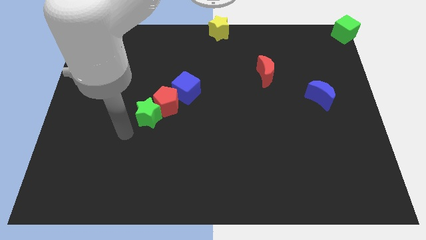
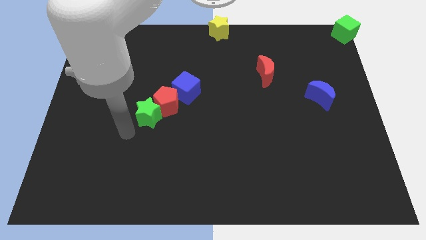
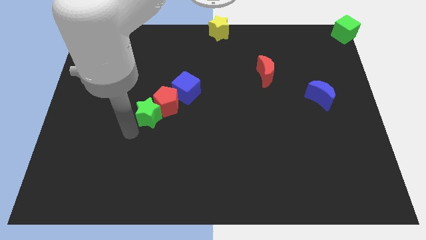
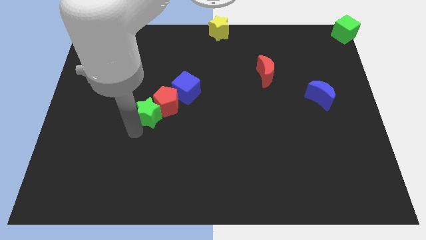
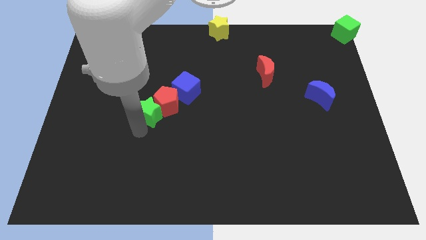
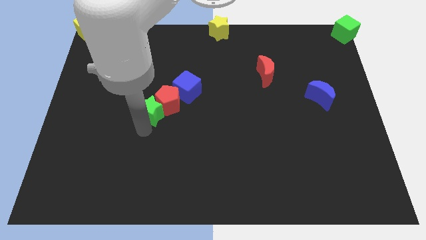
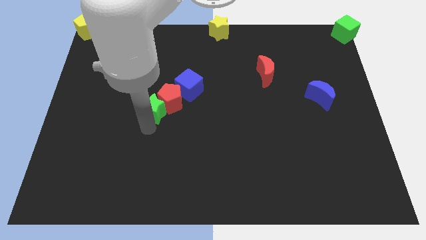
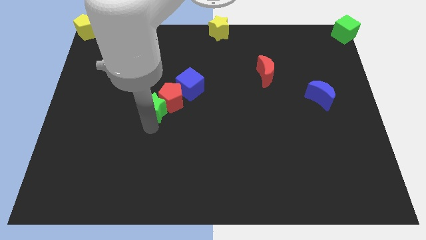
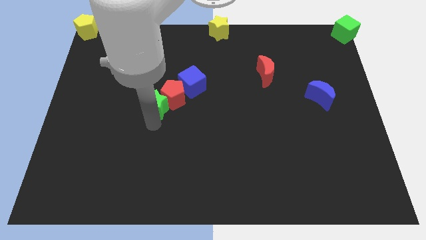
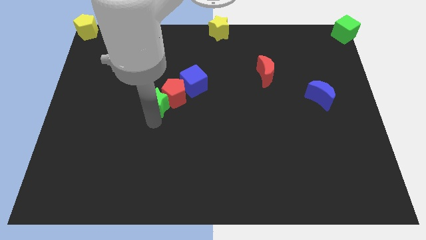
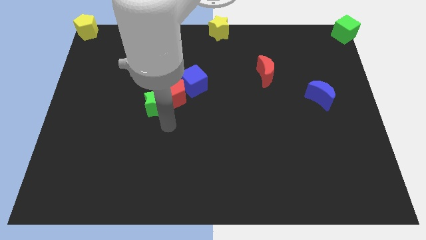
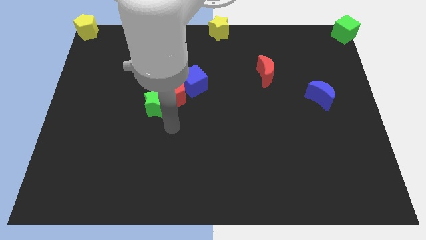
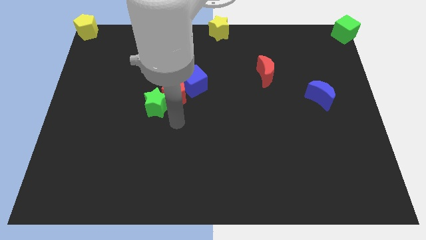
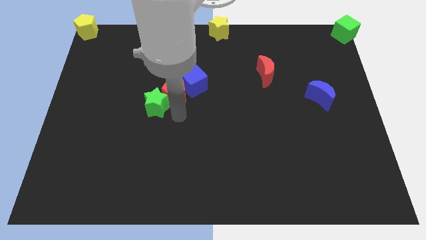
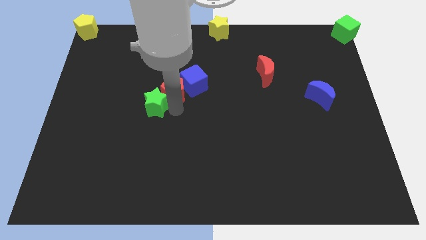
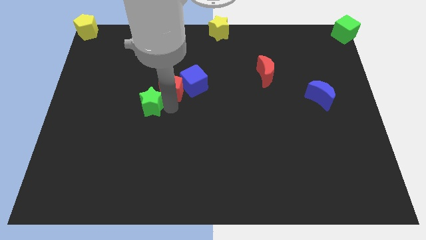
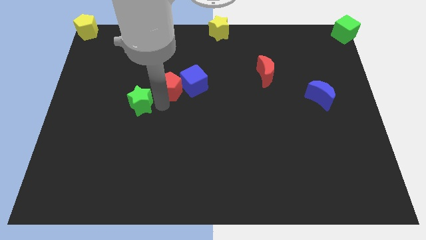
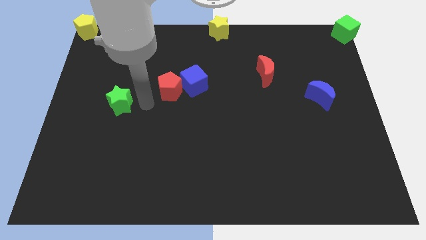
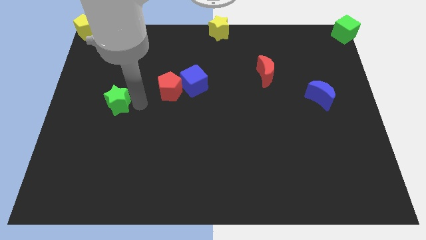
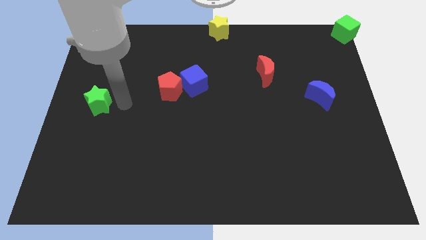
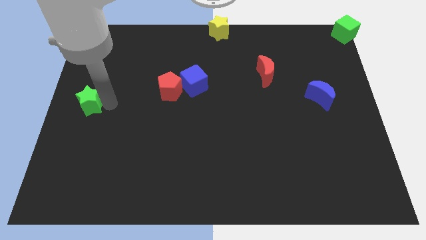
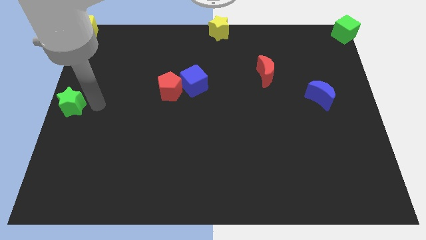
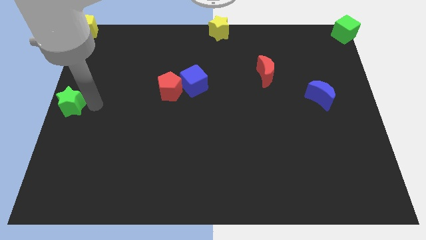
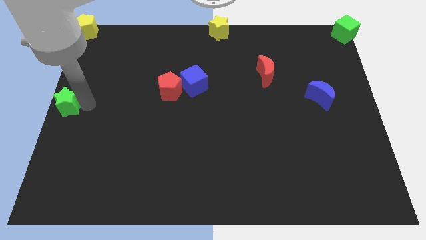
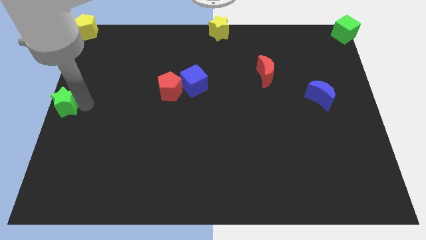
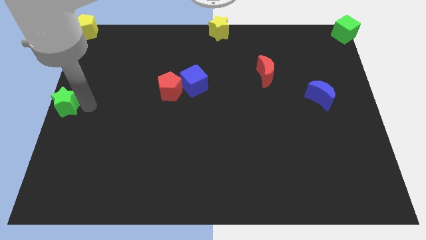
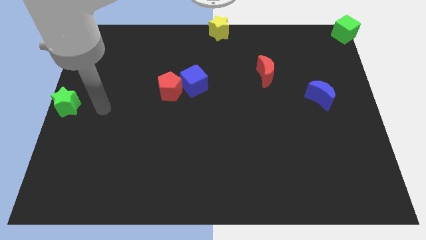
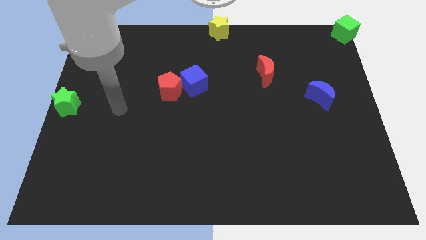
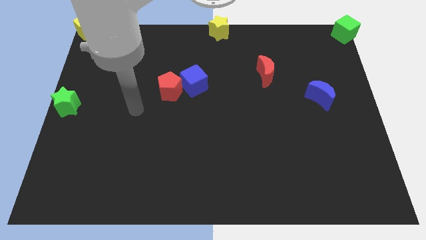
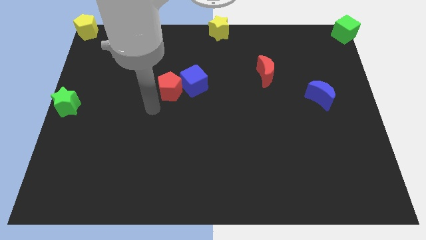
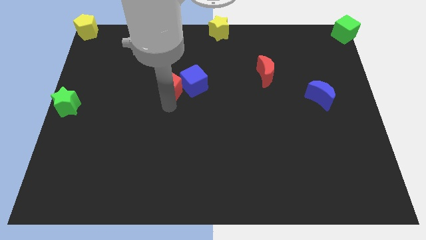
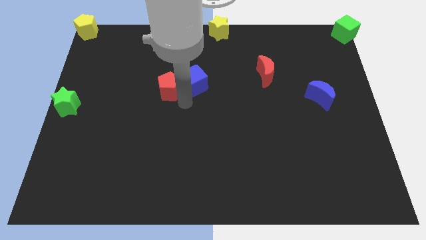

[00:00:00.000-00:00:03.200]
place the green star at the left centre of the board

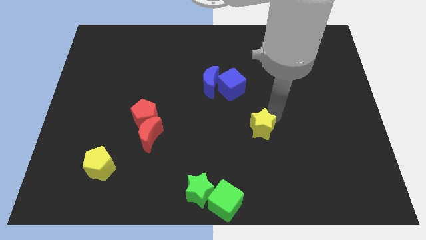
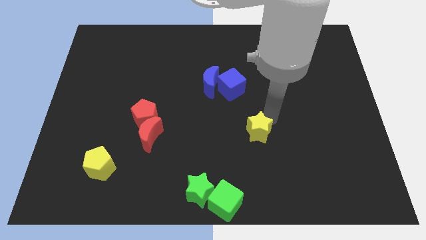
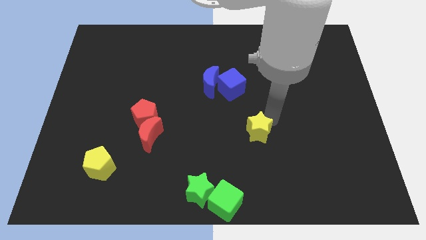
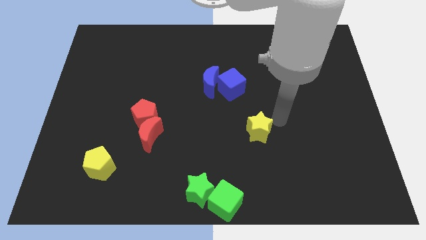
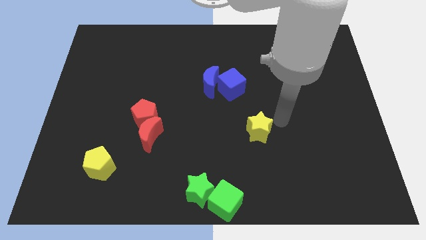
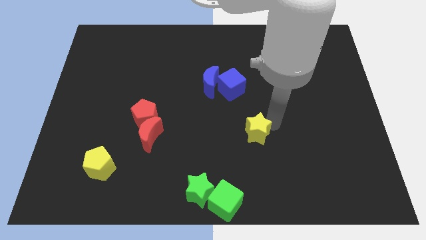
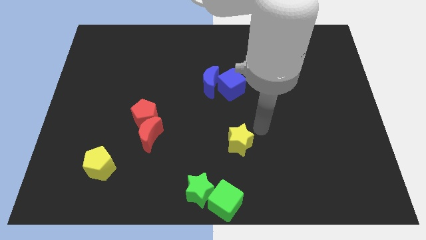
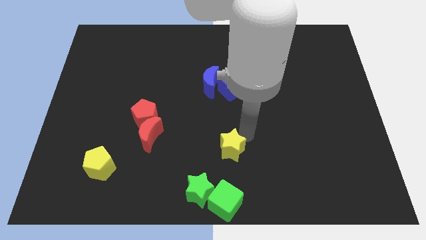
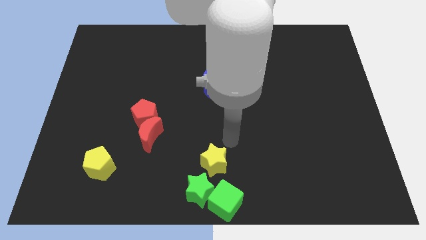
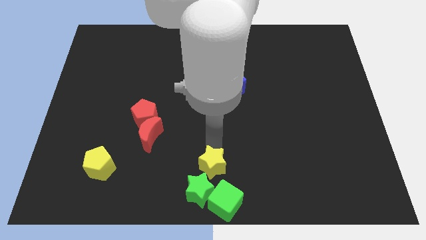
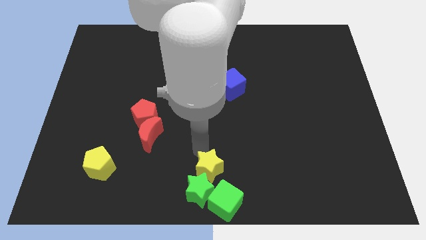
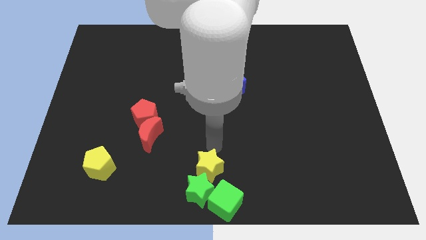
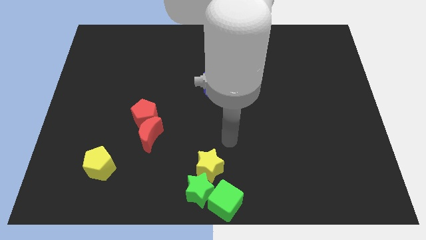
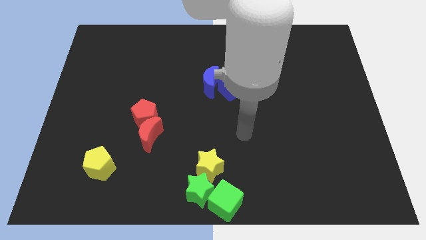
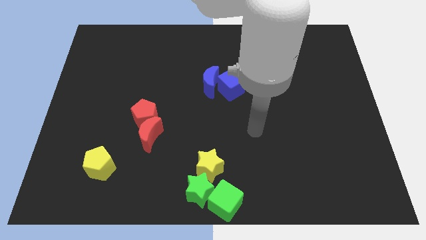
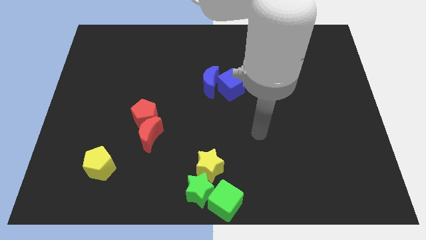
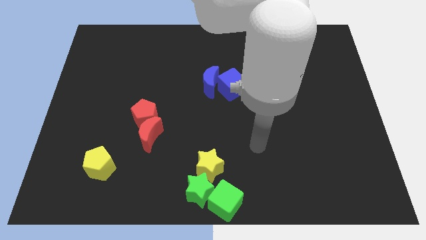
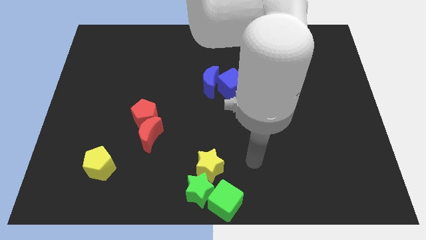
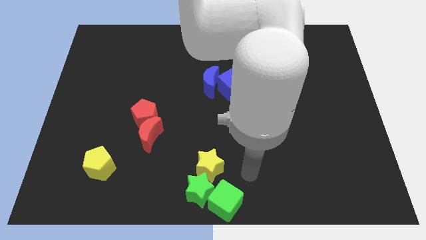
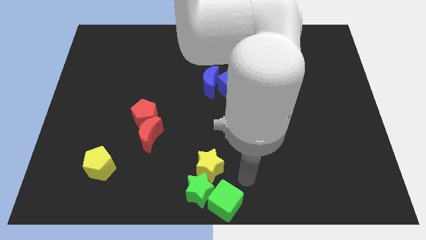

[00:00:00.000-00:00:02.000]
drag yellow star to the top of the green star

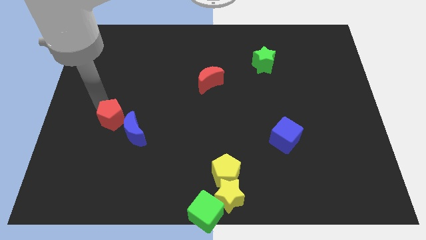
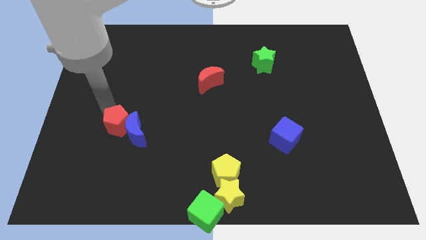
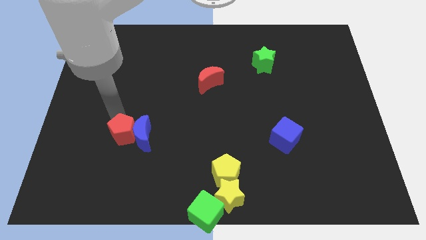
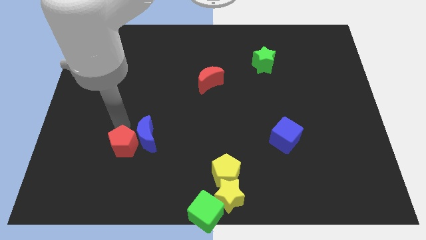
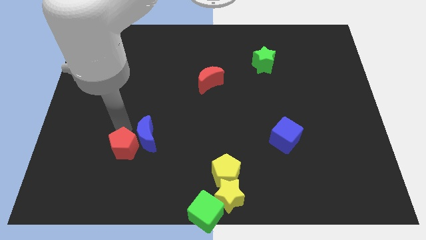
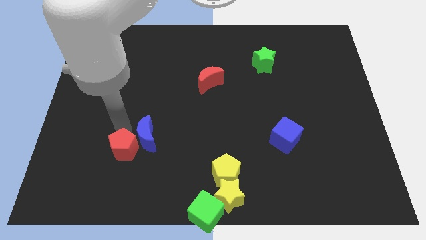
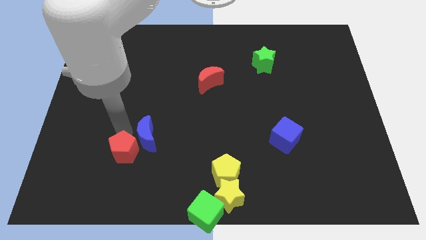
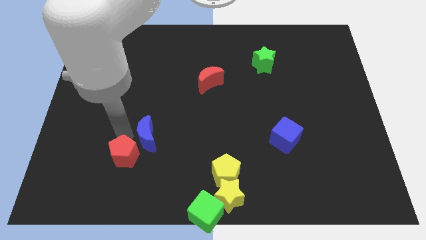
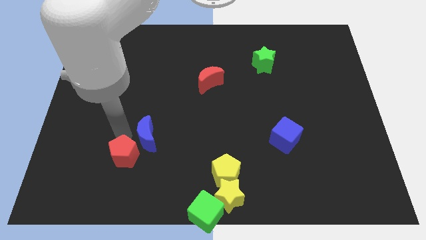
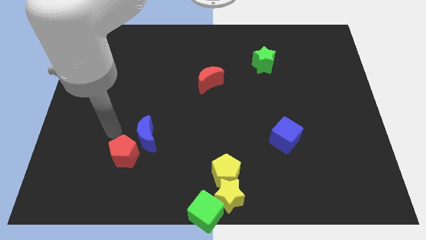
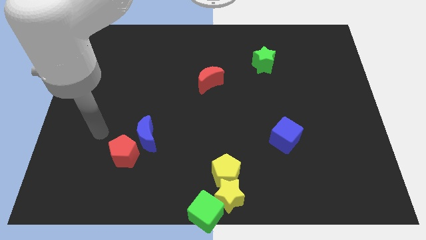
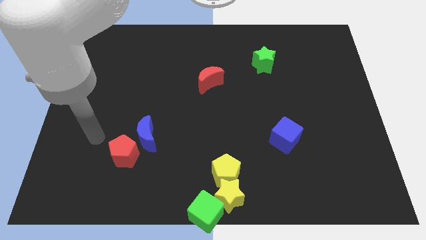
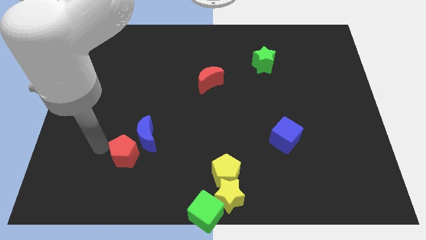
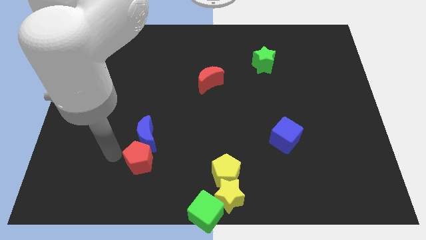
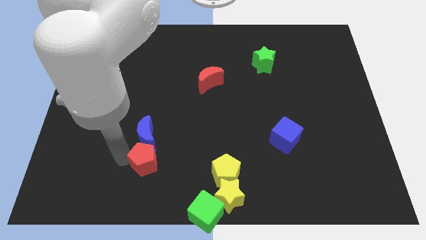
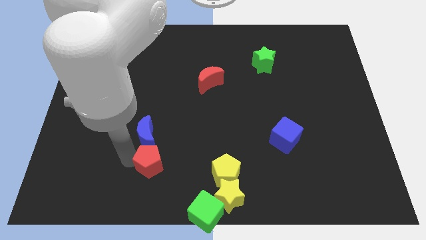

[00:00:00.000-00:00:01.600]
place red pentagon to the bottom of the blue crescent

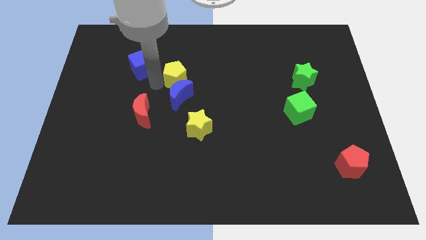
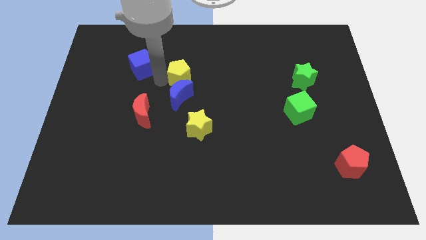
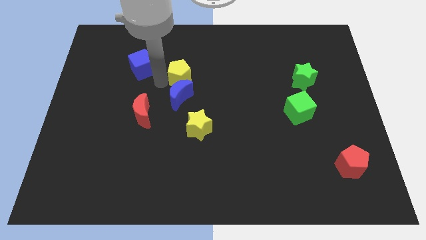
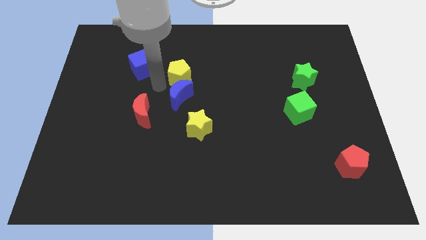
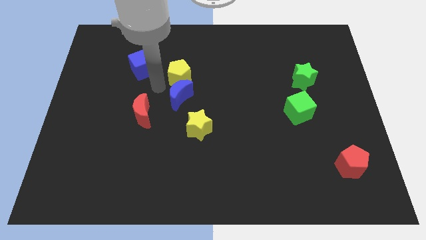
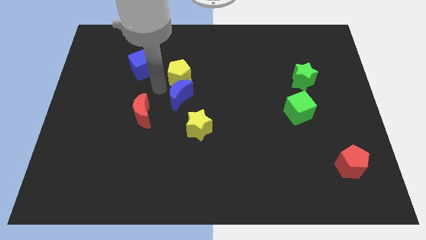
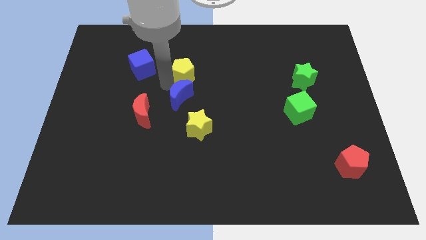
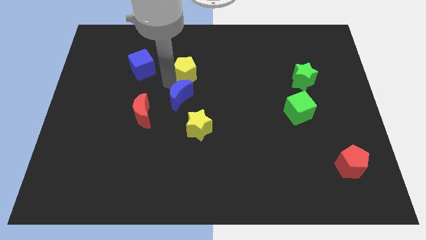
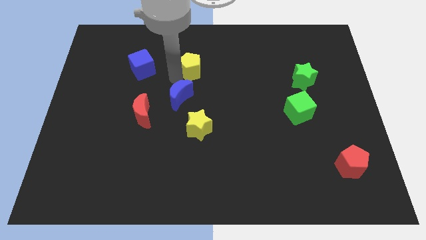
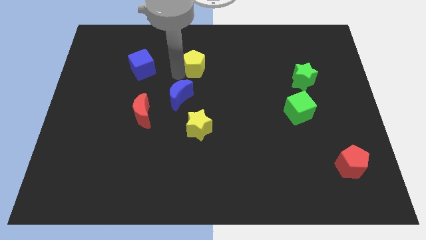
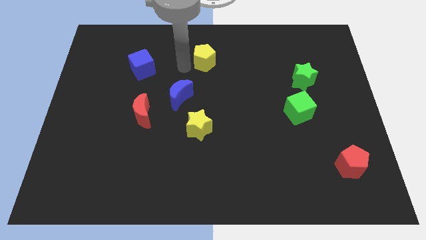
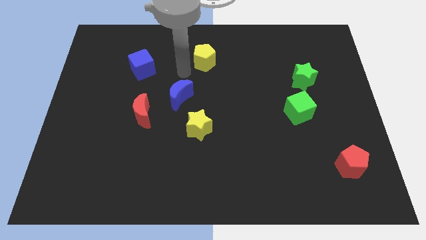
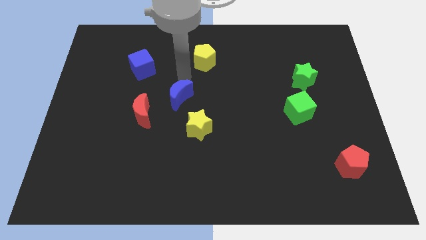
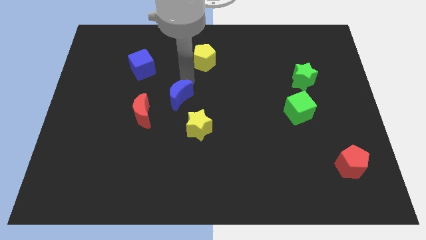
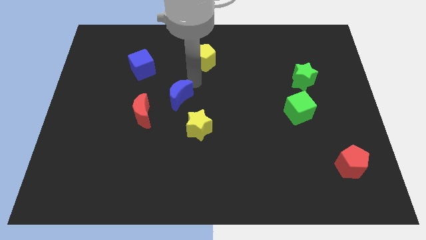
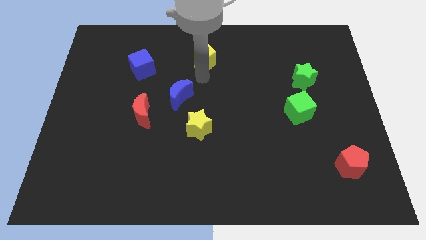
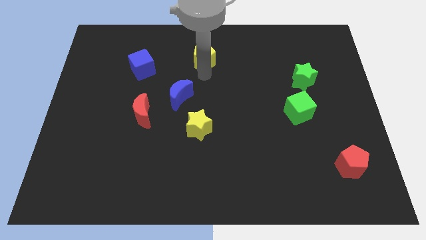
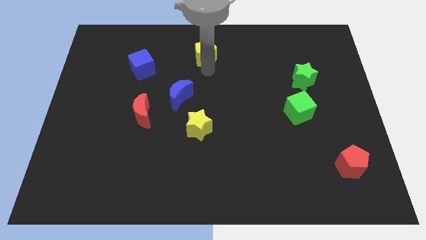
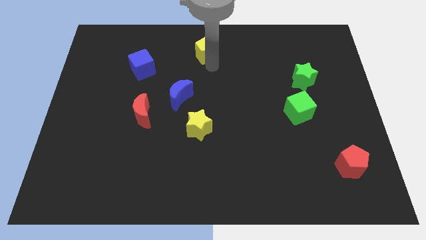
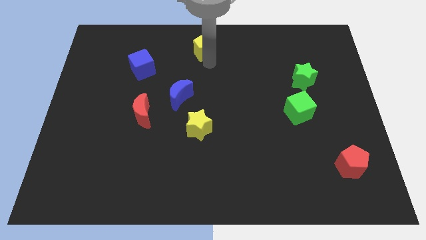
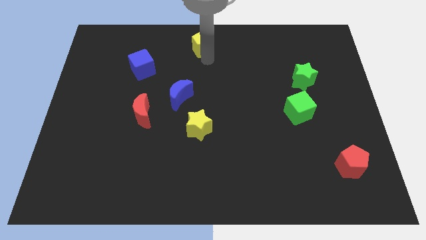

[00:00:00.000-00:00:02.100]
place yellow pentagon to the top center of the board

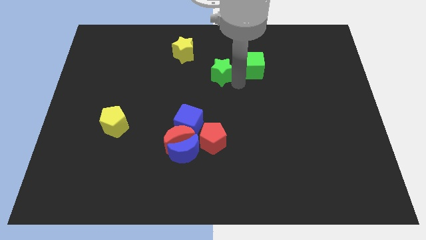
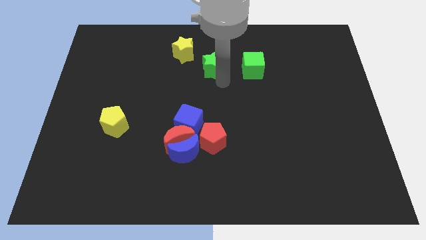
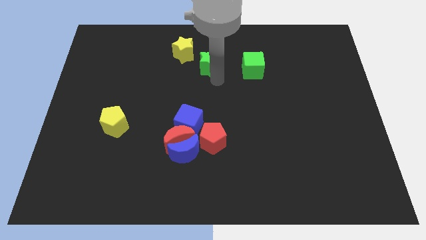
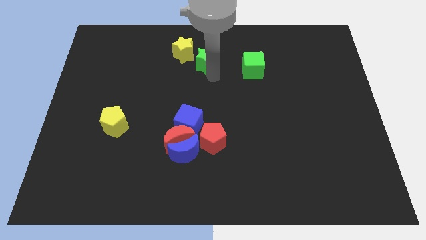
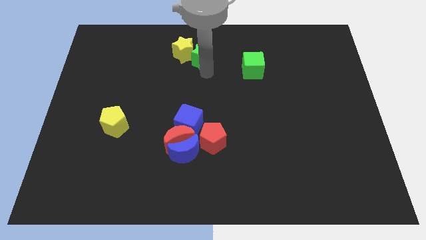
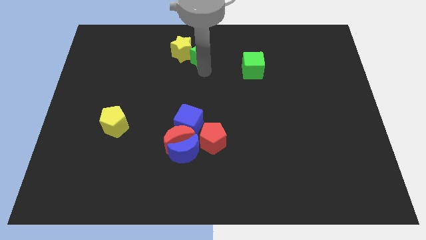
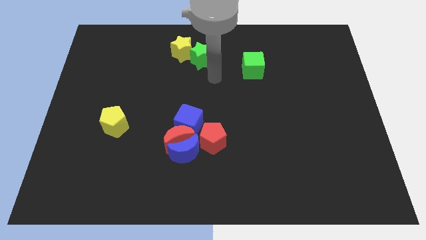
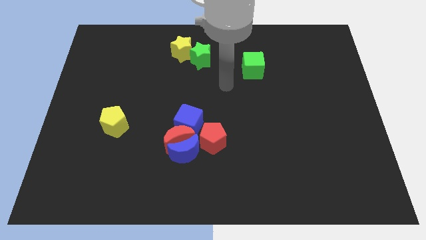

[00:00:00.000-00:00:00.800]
push the green star into yellow star
